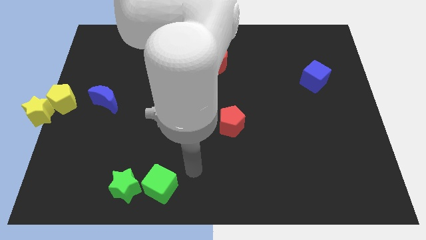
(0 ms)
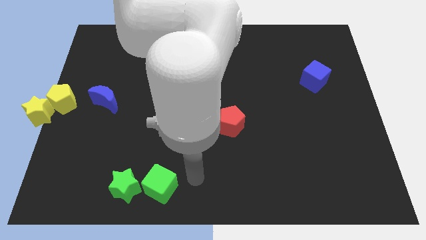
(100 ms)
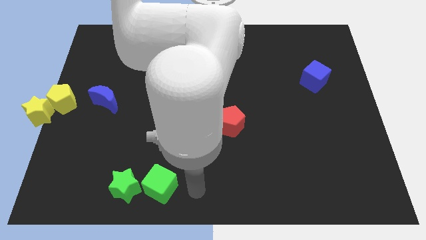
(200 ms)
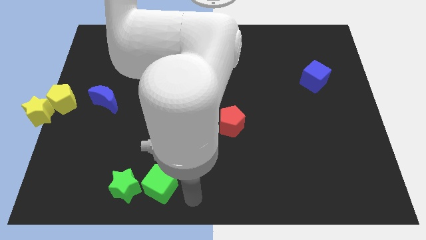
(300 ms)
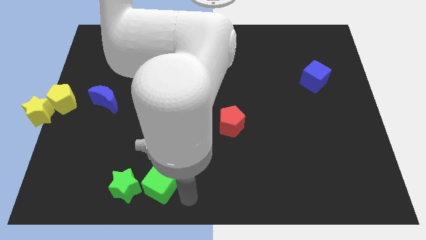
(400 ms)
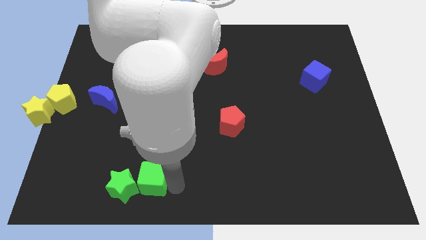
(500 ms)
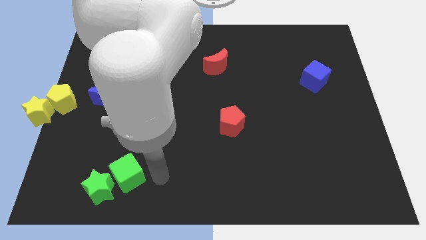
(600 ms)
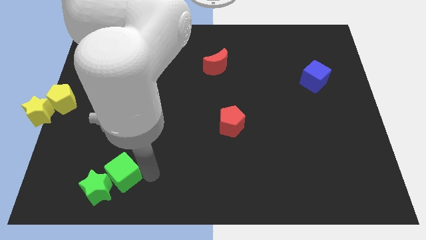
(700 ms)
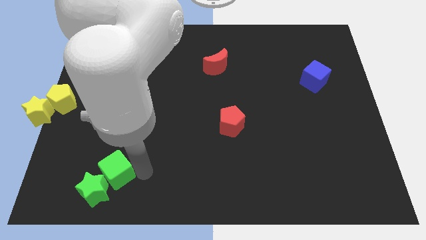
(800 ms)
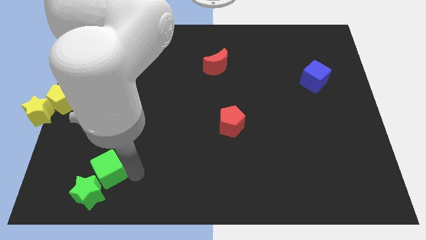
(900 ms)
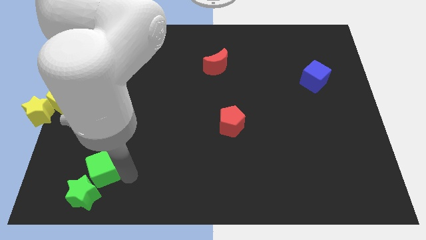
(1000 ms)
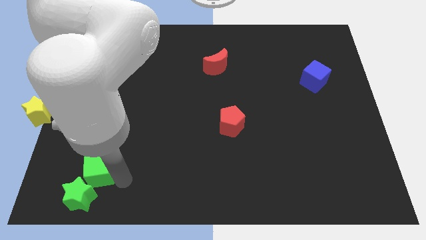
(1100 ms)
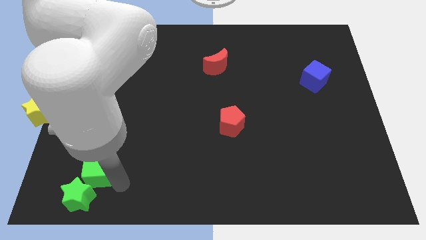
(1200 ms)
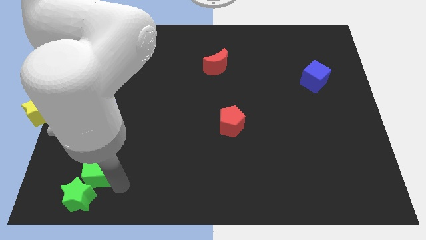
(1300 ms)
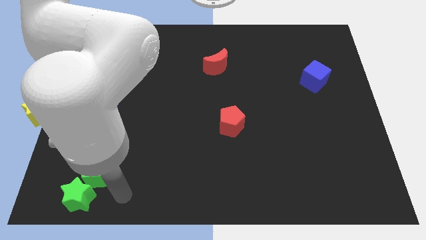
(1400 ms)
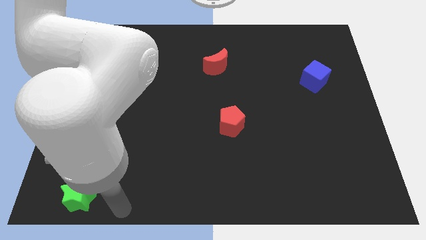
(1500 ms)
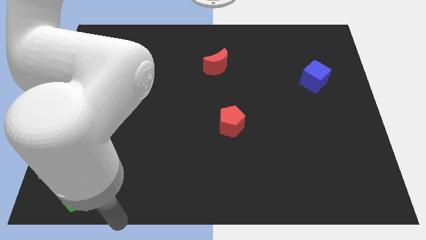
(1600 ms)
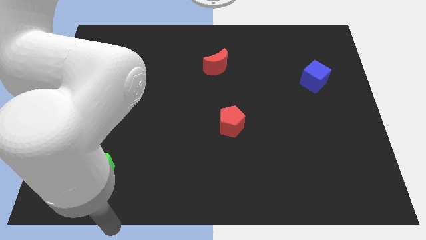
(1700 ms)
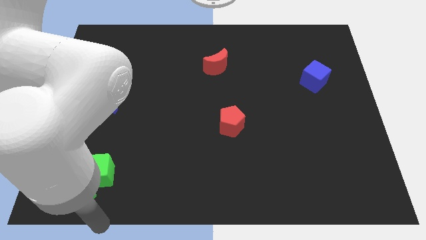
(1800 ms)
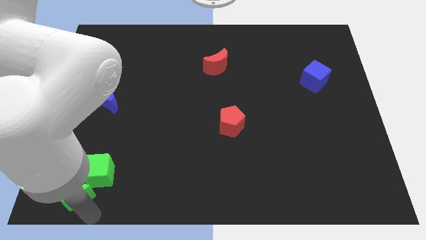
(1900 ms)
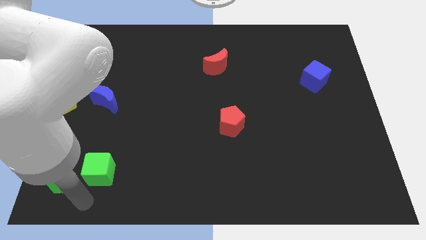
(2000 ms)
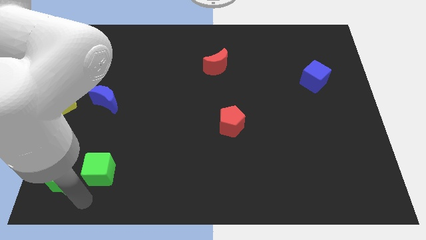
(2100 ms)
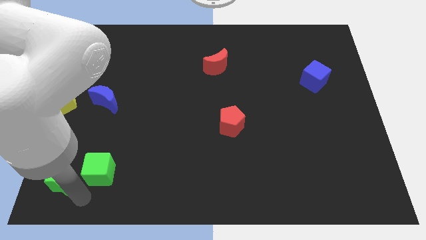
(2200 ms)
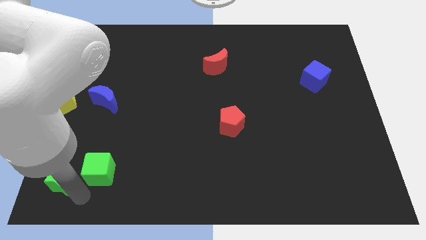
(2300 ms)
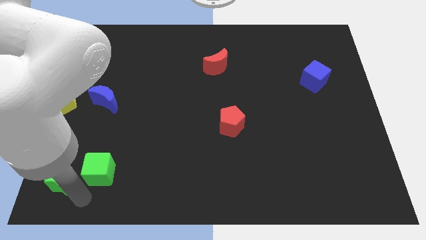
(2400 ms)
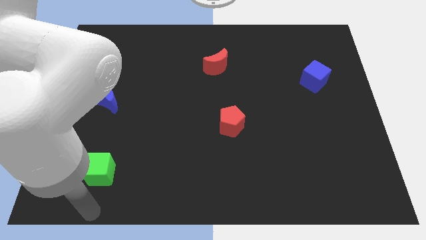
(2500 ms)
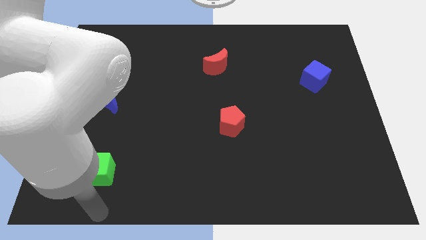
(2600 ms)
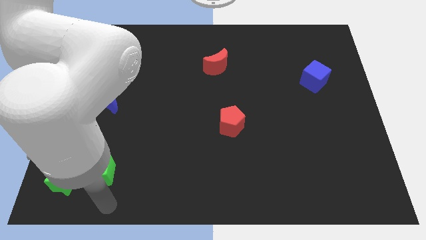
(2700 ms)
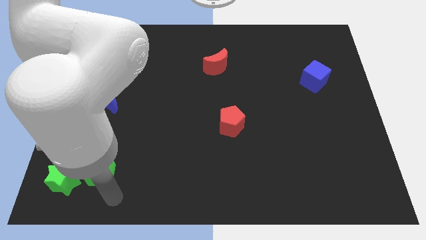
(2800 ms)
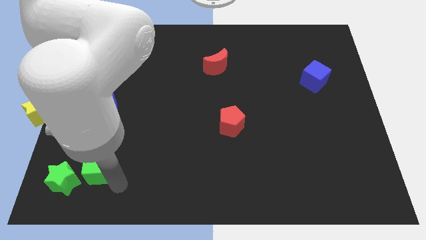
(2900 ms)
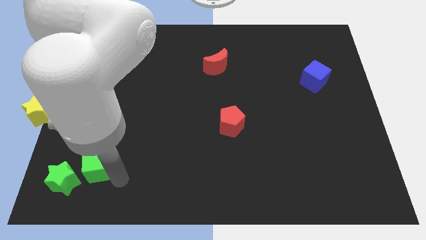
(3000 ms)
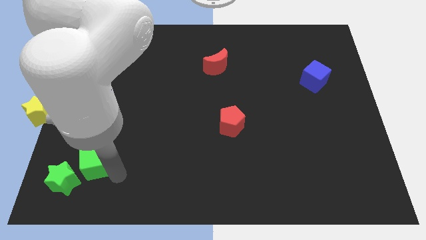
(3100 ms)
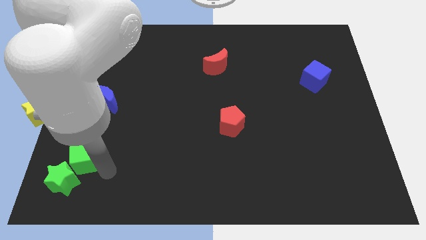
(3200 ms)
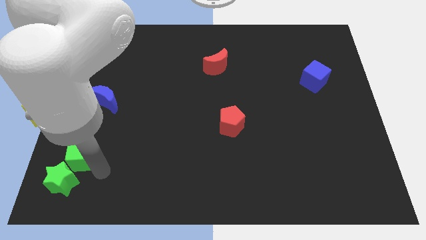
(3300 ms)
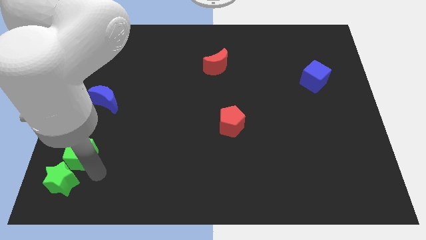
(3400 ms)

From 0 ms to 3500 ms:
push the green cube along the green star towards the left

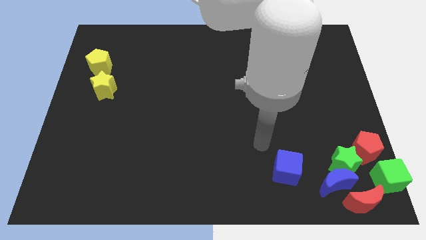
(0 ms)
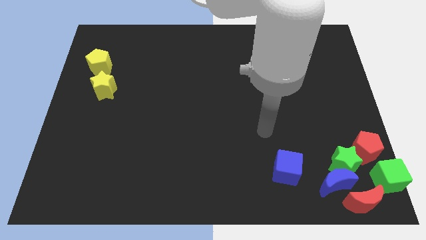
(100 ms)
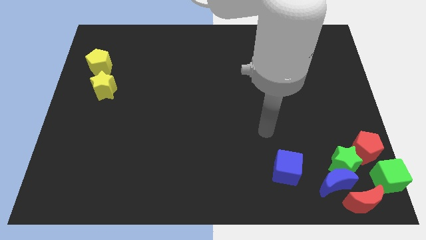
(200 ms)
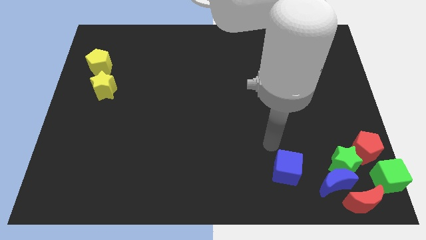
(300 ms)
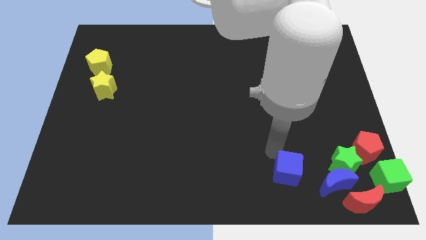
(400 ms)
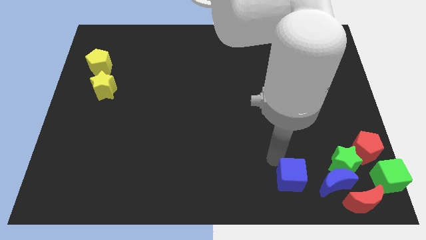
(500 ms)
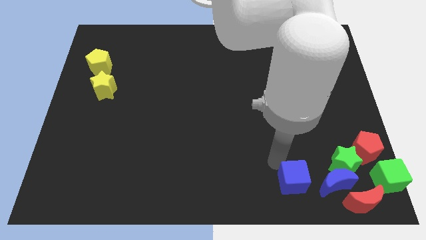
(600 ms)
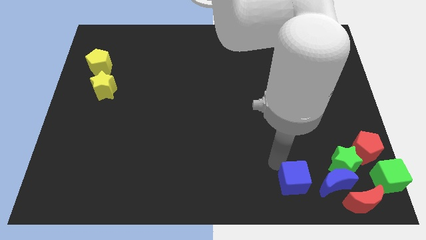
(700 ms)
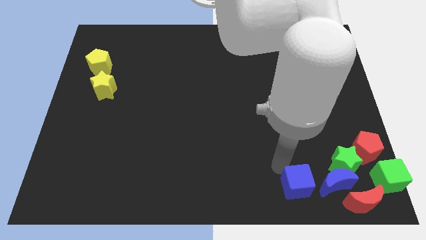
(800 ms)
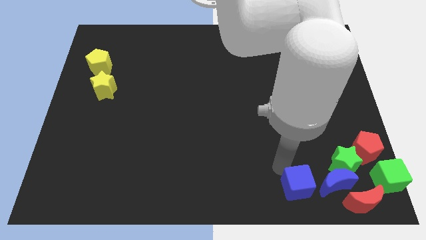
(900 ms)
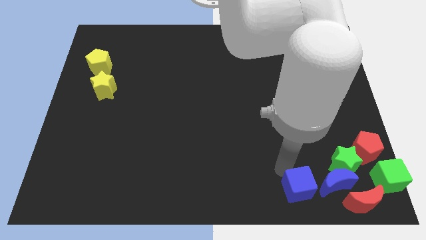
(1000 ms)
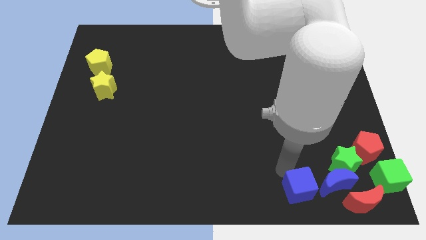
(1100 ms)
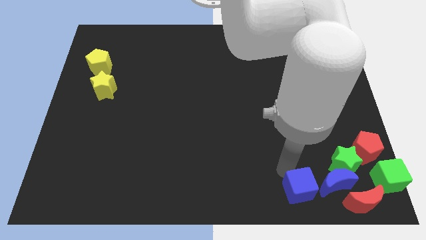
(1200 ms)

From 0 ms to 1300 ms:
move the blue cube left to the blue crescent

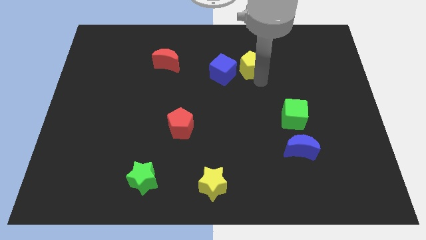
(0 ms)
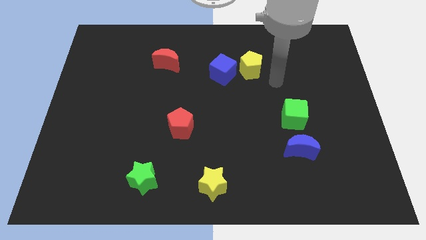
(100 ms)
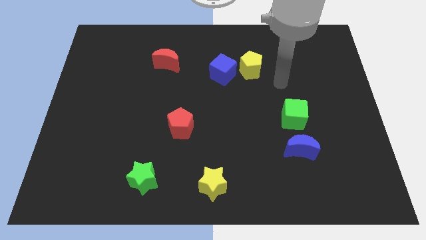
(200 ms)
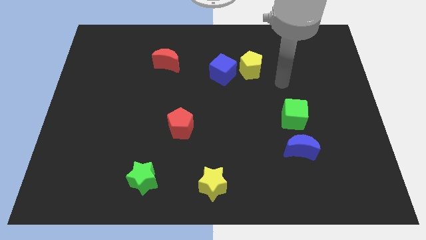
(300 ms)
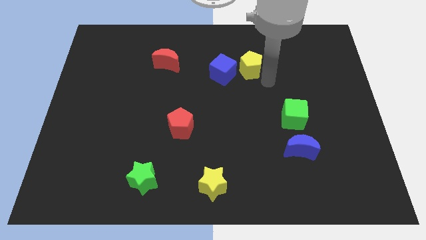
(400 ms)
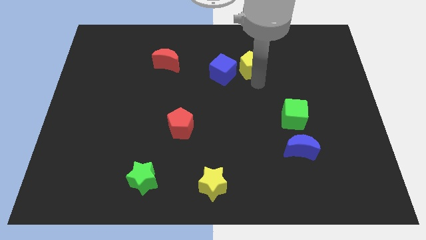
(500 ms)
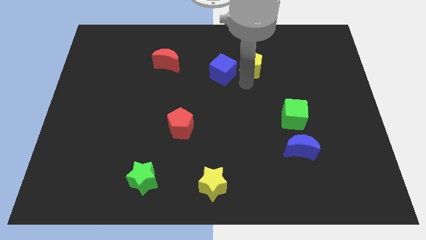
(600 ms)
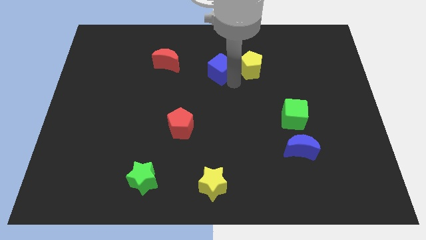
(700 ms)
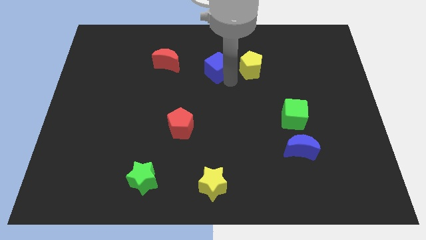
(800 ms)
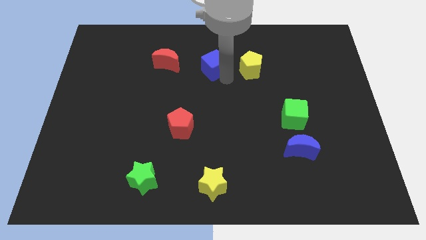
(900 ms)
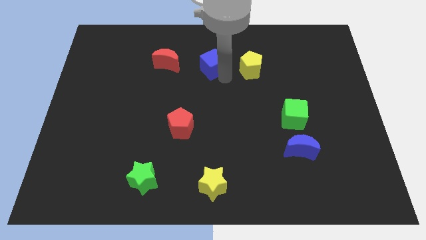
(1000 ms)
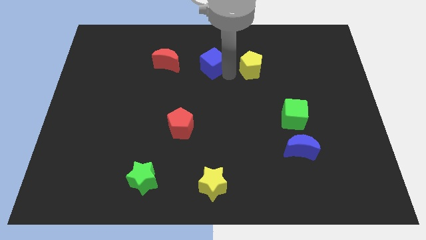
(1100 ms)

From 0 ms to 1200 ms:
move the blue cube right to the red crescent

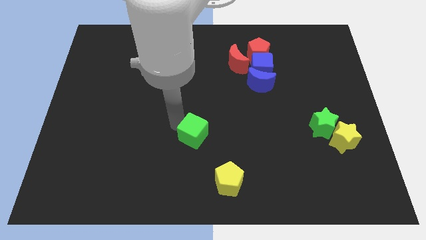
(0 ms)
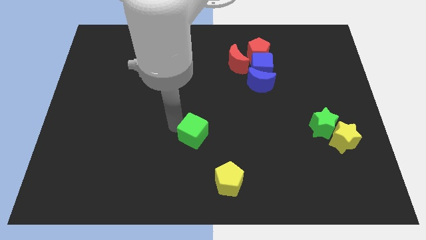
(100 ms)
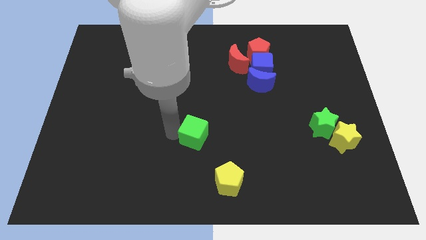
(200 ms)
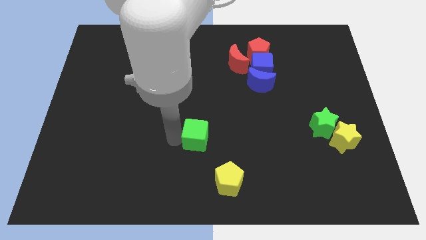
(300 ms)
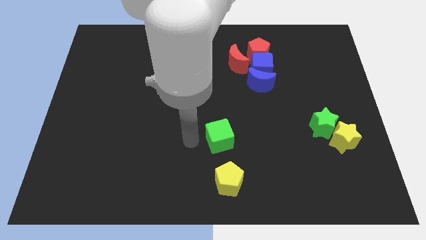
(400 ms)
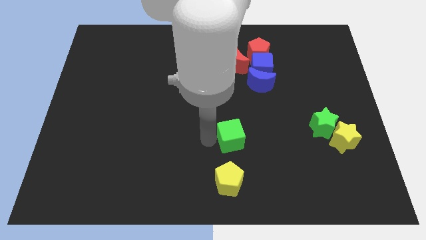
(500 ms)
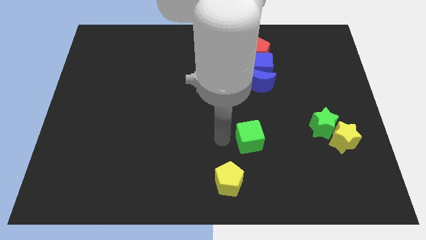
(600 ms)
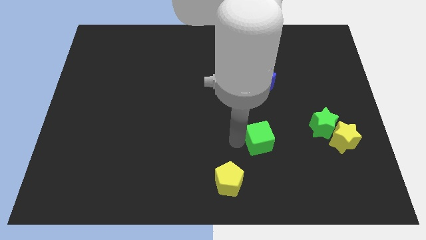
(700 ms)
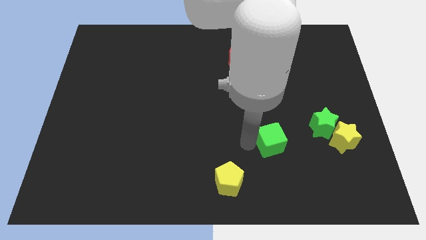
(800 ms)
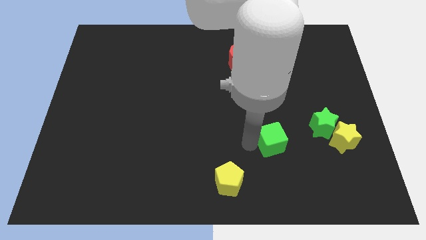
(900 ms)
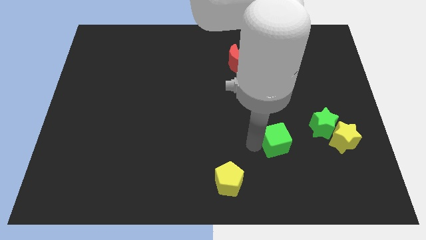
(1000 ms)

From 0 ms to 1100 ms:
move the green cube to the top right of the yellow pentagon

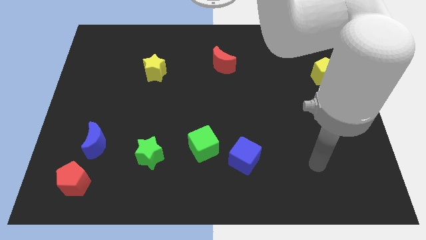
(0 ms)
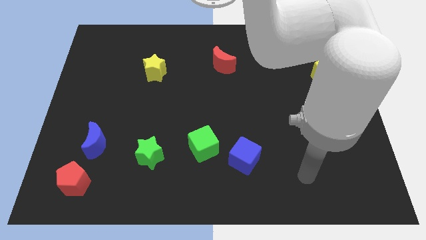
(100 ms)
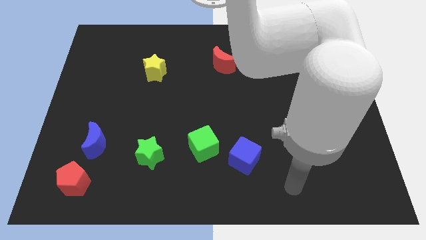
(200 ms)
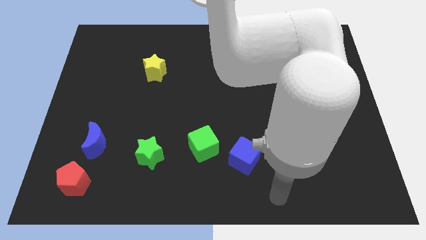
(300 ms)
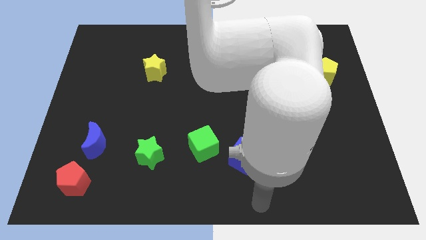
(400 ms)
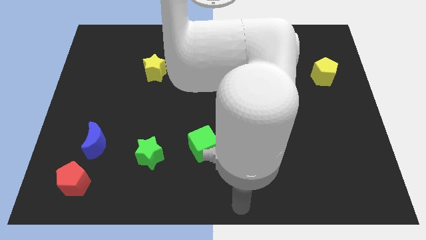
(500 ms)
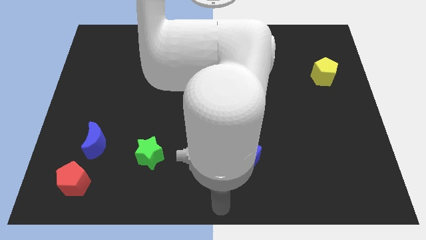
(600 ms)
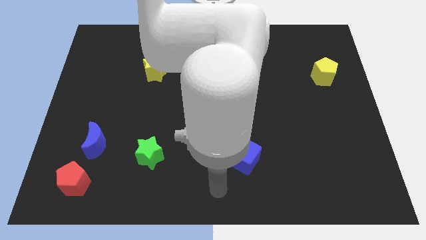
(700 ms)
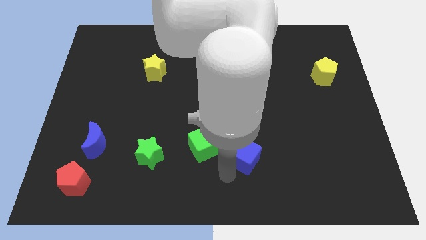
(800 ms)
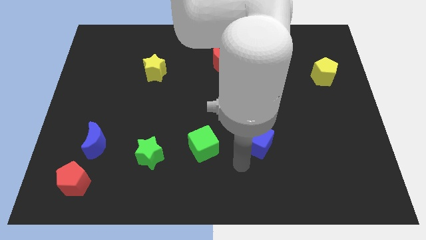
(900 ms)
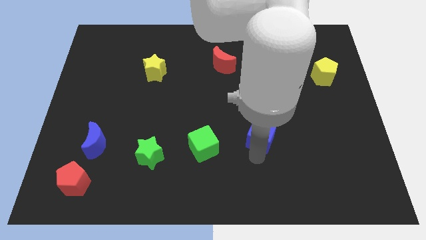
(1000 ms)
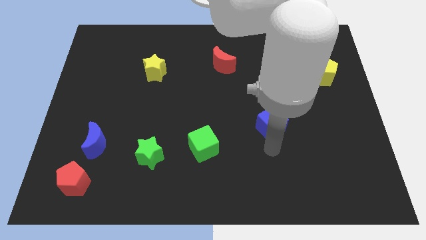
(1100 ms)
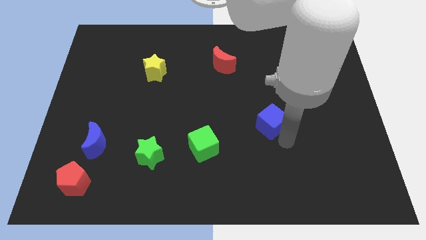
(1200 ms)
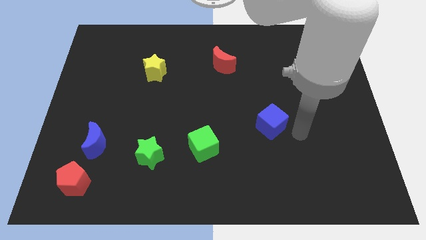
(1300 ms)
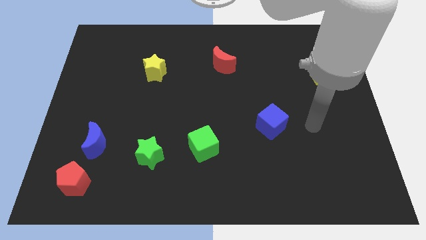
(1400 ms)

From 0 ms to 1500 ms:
move the blue cube slightly upwards

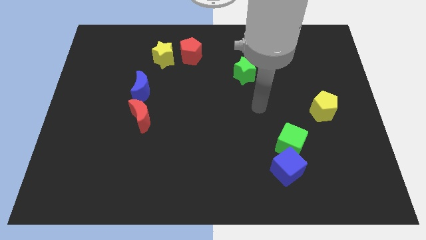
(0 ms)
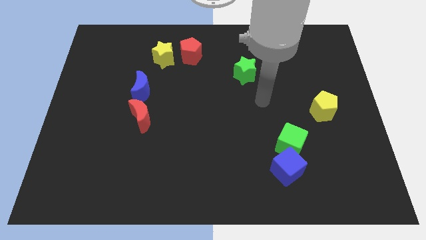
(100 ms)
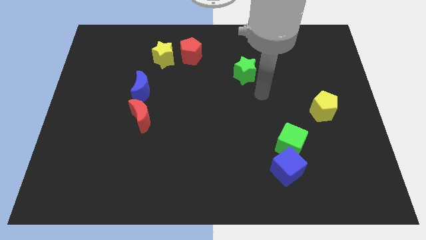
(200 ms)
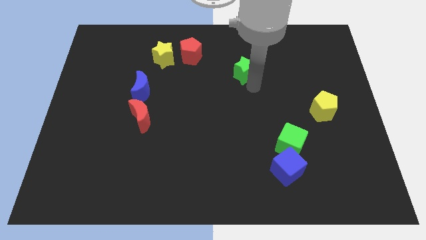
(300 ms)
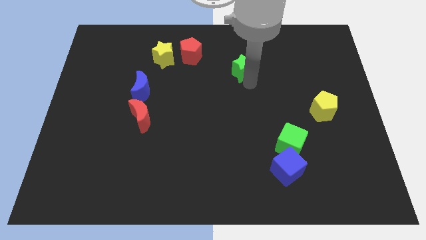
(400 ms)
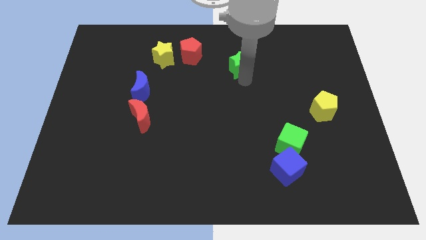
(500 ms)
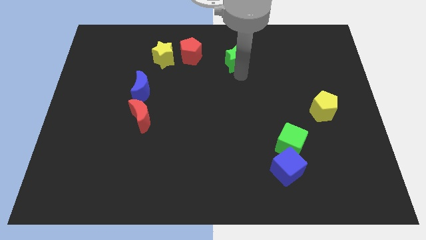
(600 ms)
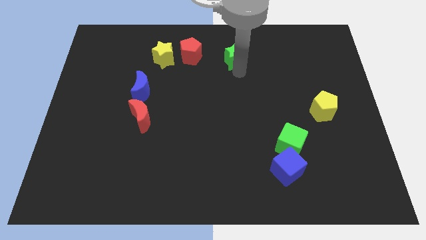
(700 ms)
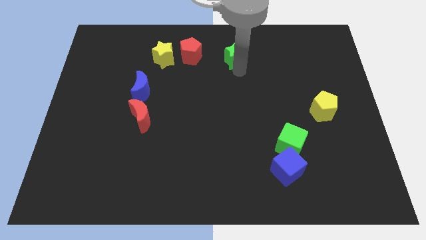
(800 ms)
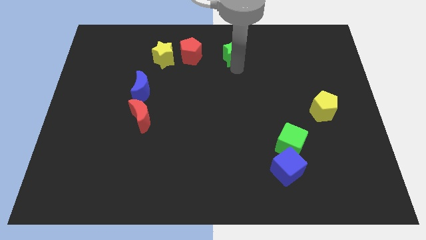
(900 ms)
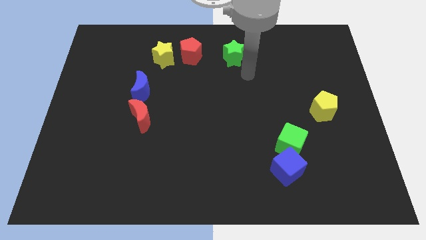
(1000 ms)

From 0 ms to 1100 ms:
push green star towards the top center of the board
